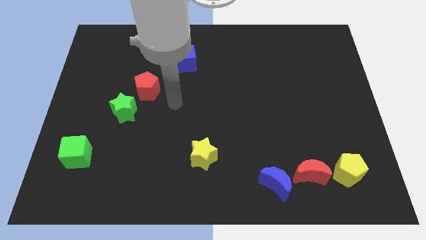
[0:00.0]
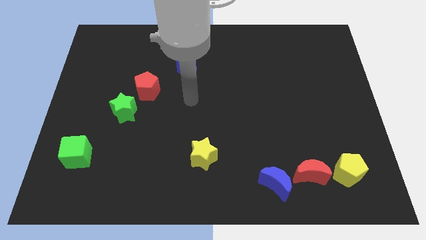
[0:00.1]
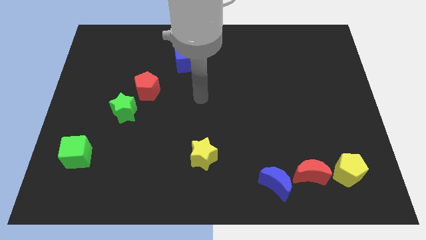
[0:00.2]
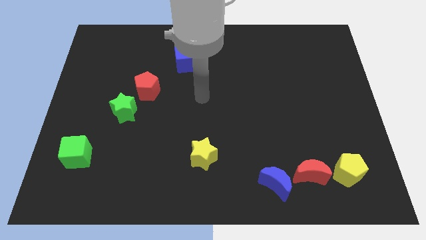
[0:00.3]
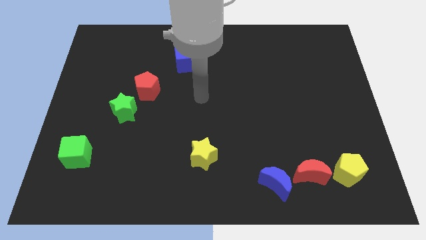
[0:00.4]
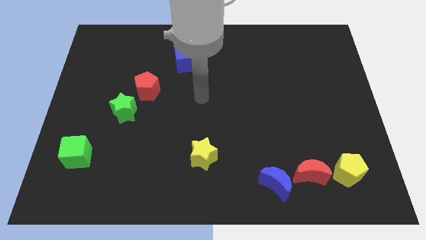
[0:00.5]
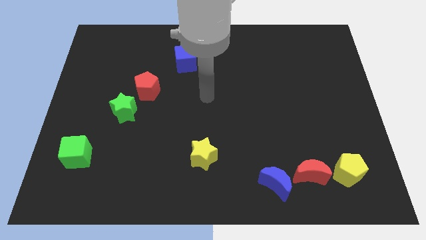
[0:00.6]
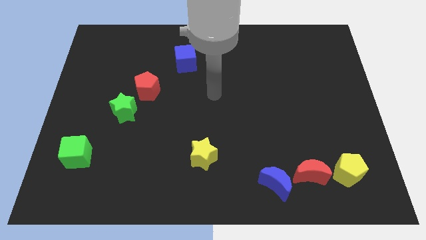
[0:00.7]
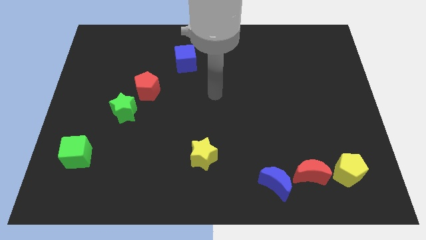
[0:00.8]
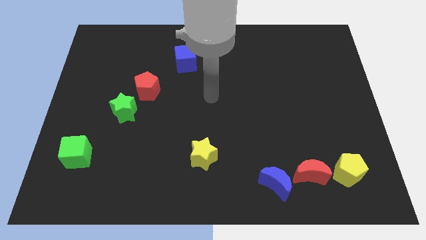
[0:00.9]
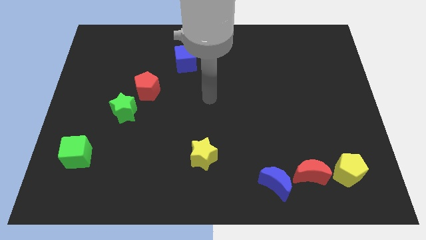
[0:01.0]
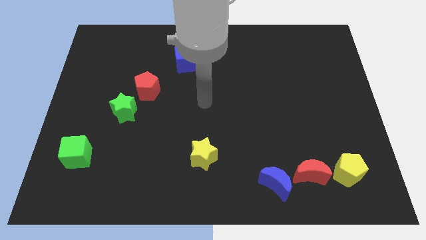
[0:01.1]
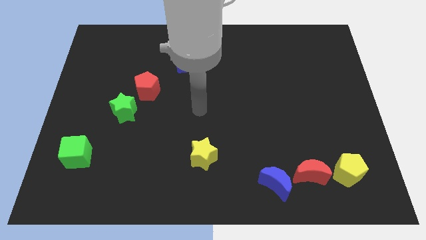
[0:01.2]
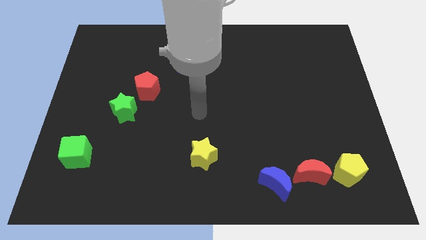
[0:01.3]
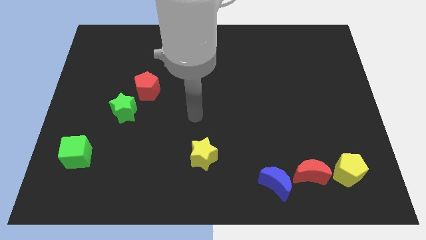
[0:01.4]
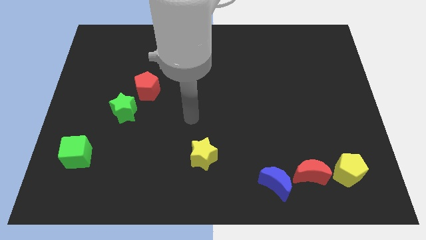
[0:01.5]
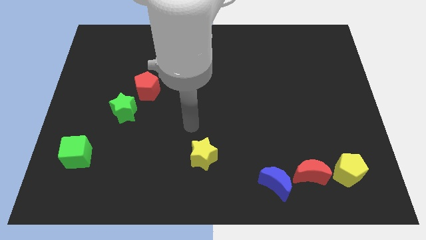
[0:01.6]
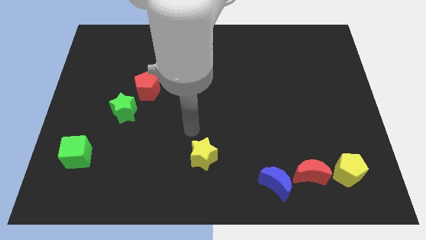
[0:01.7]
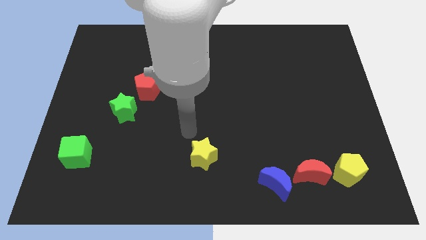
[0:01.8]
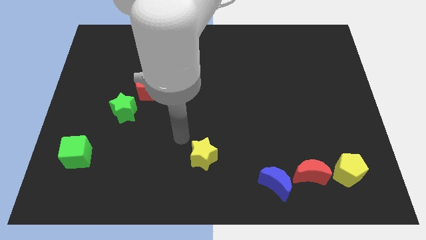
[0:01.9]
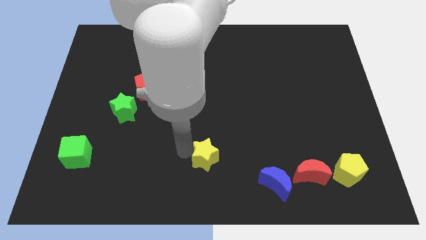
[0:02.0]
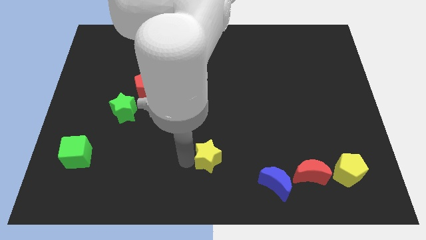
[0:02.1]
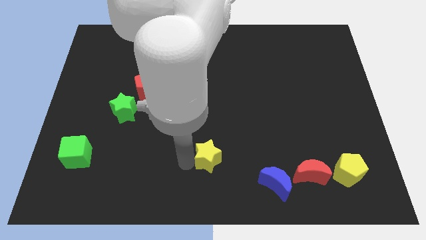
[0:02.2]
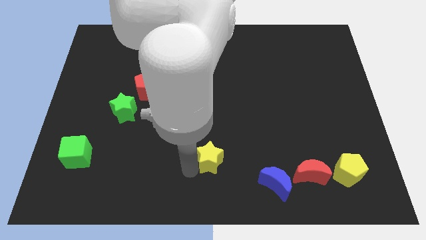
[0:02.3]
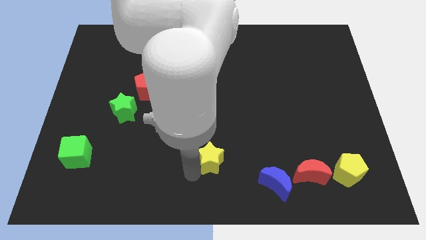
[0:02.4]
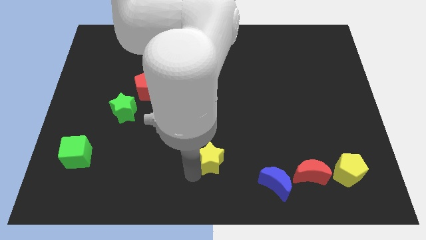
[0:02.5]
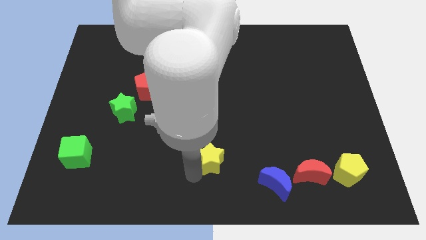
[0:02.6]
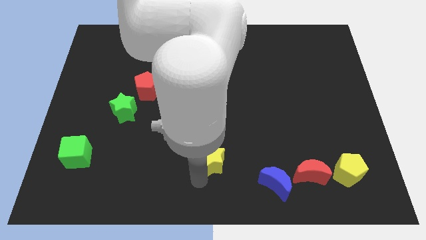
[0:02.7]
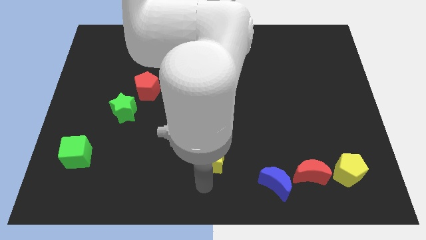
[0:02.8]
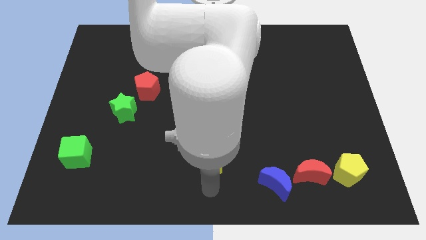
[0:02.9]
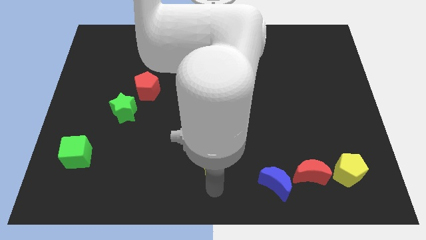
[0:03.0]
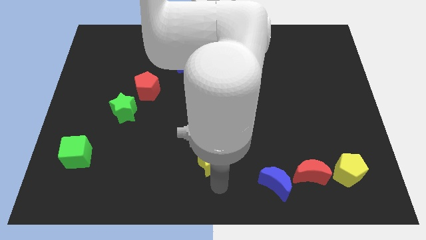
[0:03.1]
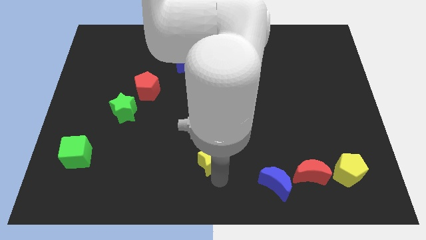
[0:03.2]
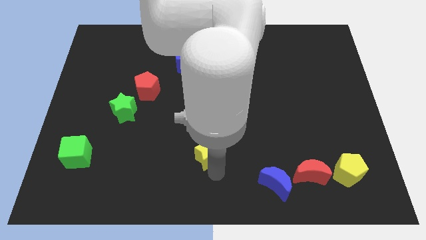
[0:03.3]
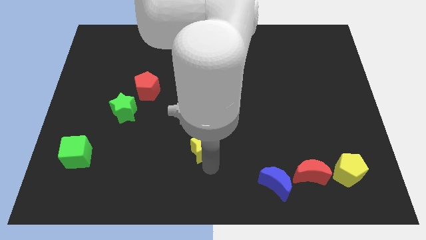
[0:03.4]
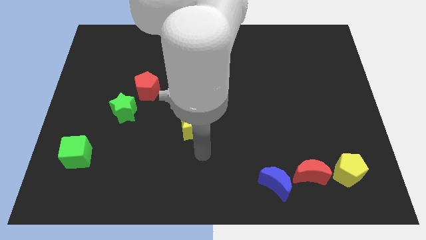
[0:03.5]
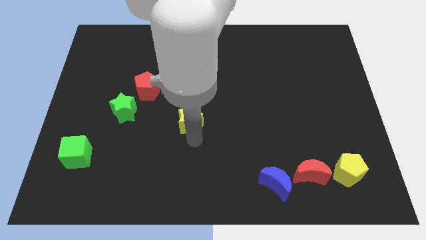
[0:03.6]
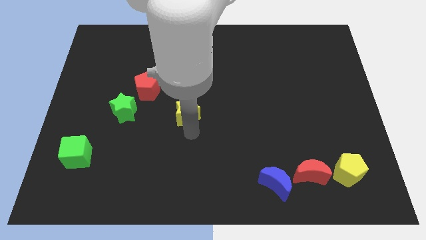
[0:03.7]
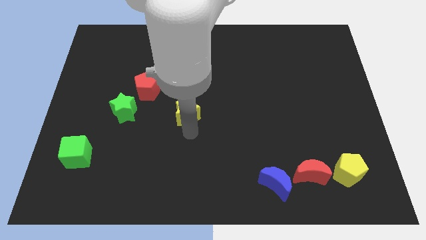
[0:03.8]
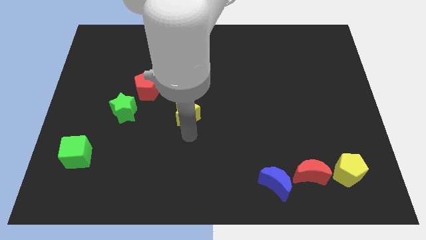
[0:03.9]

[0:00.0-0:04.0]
move the yellow star to the right of the green star

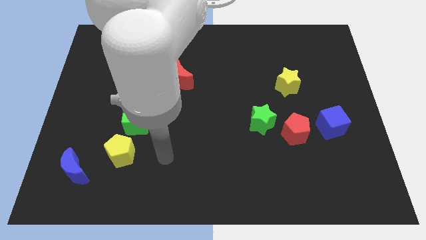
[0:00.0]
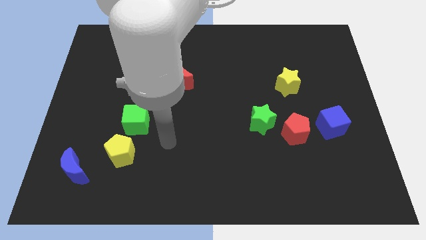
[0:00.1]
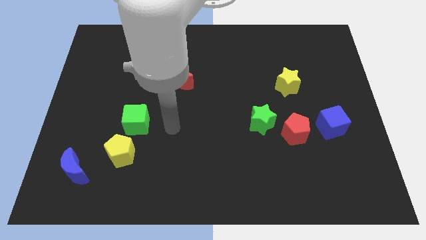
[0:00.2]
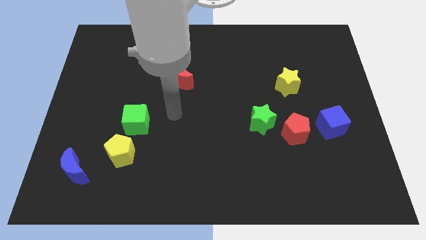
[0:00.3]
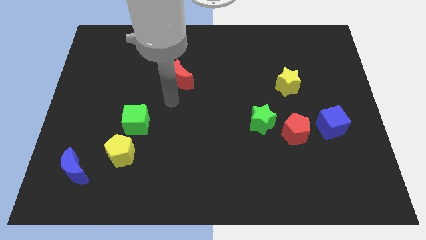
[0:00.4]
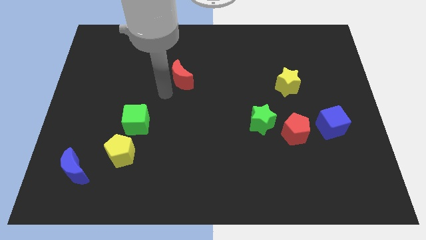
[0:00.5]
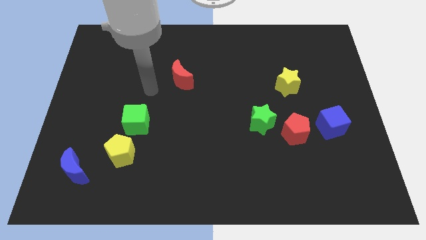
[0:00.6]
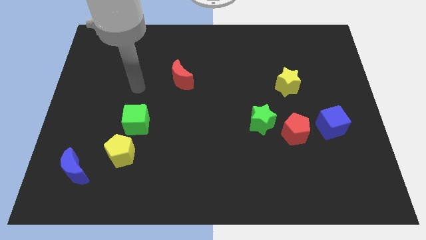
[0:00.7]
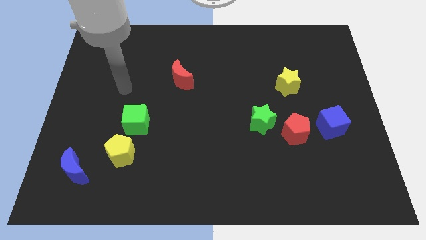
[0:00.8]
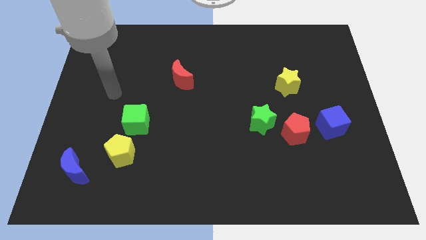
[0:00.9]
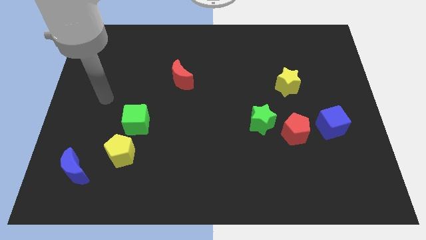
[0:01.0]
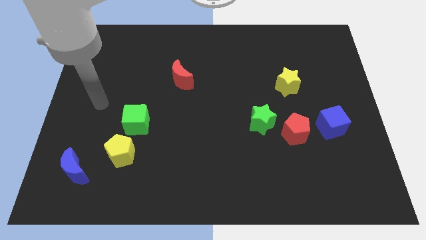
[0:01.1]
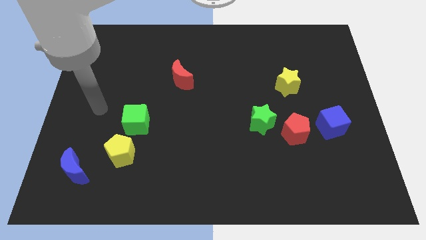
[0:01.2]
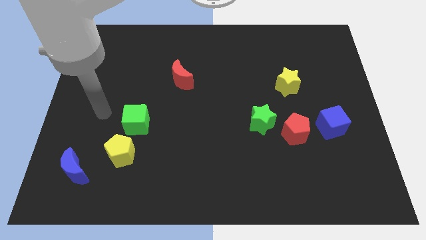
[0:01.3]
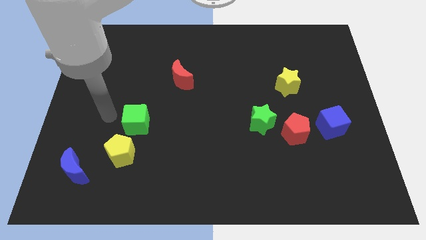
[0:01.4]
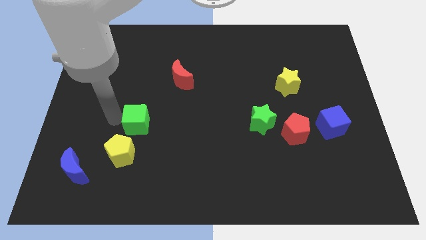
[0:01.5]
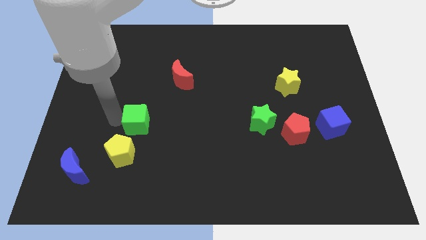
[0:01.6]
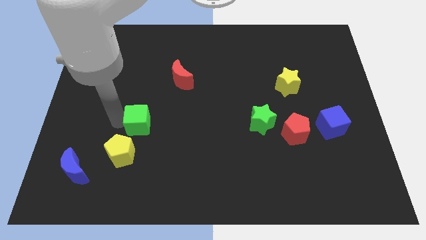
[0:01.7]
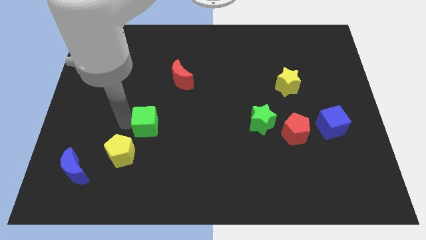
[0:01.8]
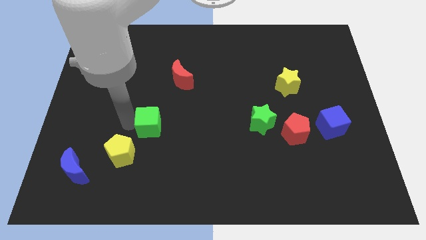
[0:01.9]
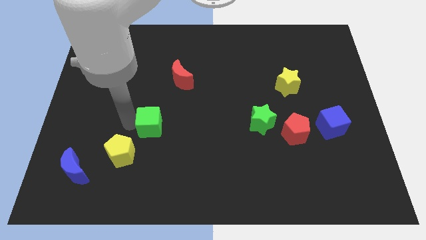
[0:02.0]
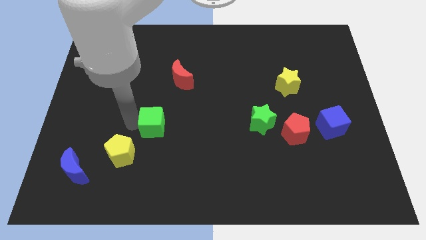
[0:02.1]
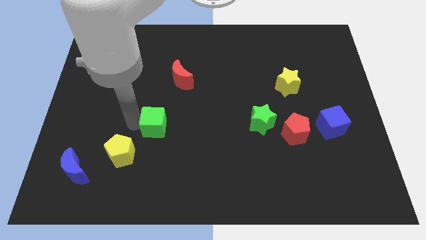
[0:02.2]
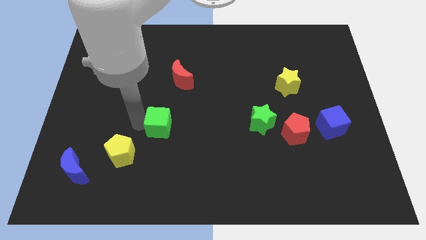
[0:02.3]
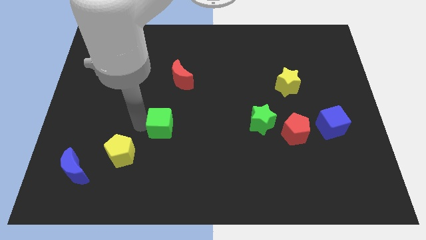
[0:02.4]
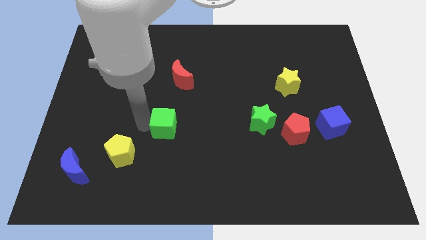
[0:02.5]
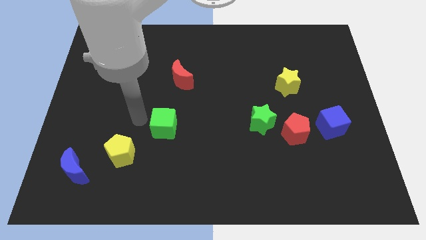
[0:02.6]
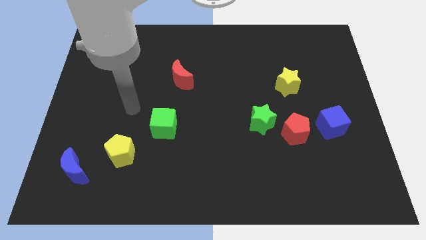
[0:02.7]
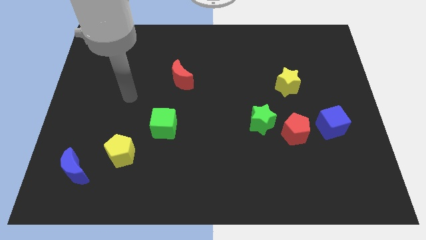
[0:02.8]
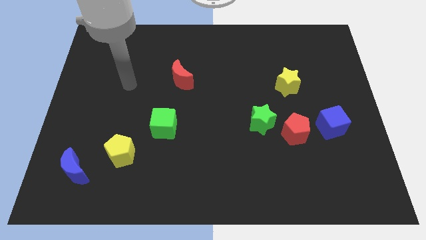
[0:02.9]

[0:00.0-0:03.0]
place the green cube diagonally right to the yellow pentagon

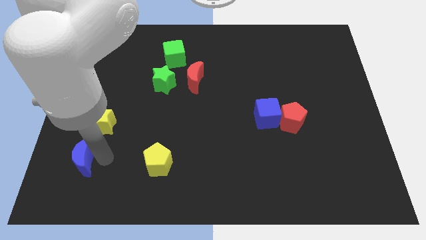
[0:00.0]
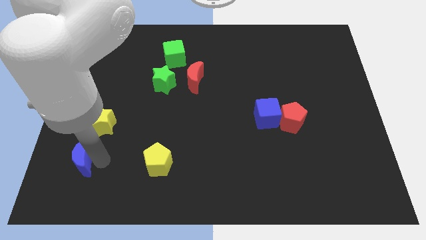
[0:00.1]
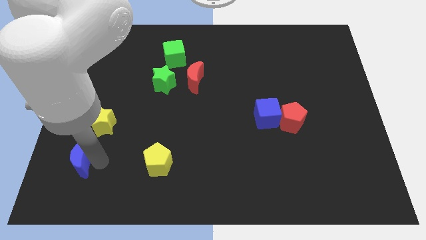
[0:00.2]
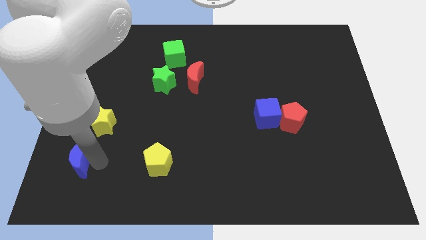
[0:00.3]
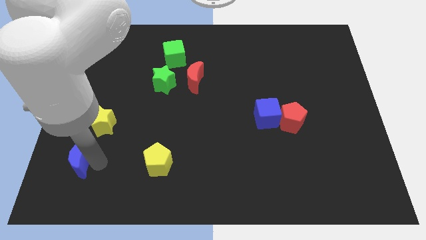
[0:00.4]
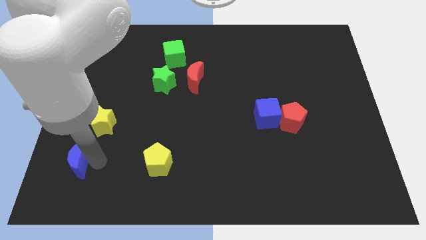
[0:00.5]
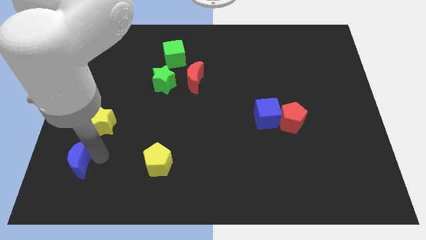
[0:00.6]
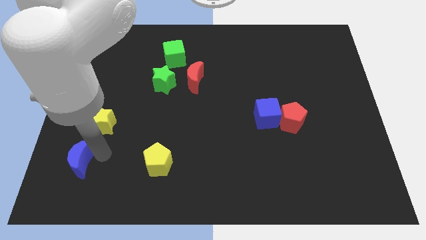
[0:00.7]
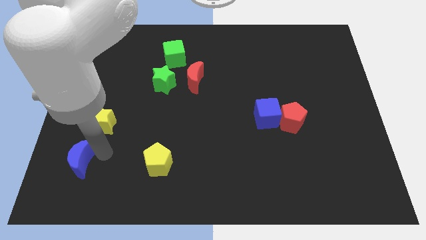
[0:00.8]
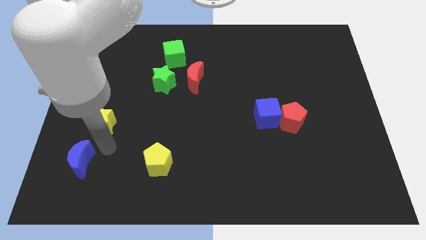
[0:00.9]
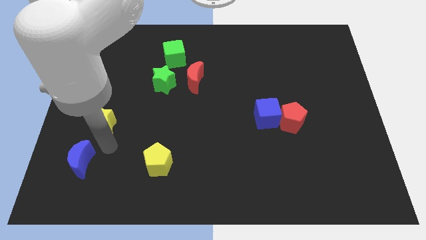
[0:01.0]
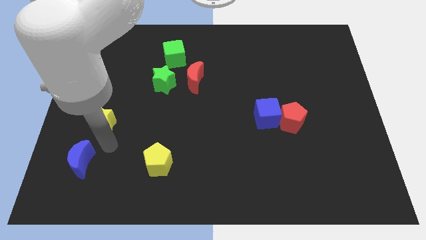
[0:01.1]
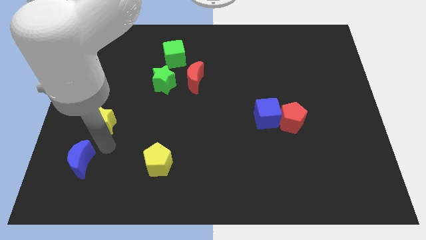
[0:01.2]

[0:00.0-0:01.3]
move blue moon left below the yellow star

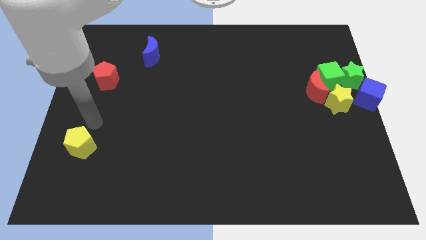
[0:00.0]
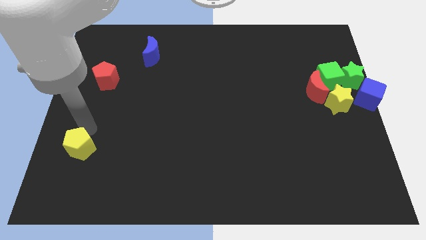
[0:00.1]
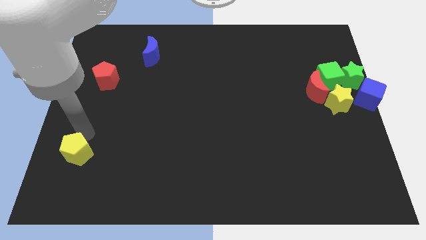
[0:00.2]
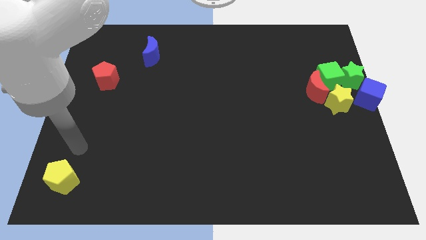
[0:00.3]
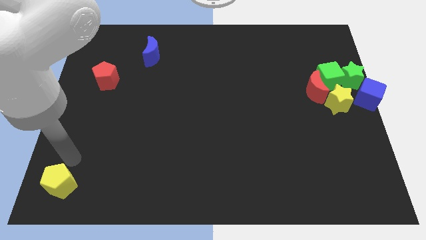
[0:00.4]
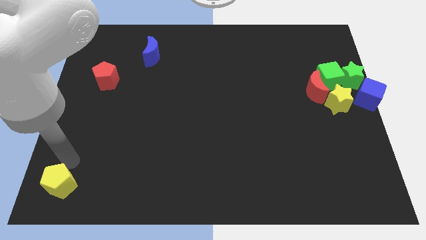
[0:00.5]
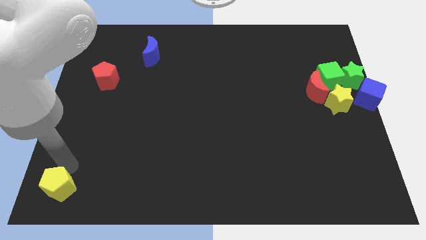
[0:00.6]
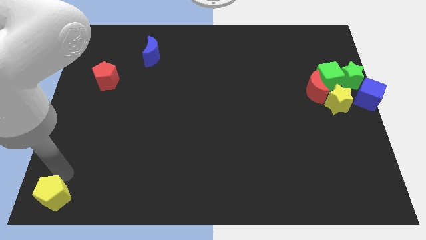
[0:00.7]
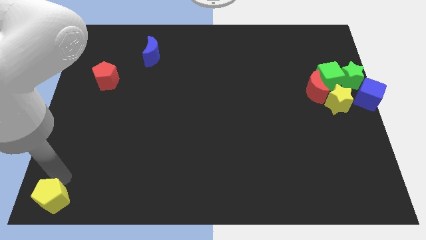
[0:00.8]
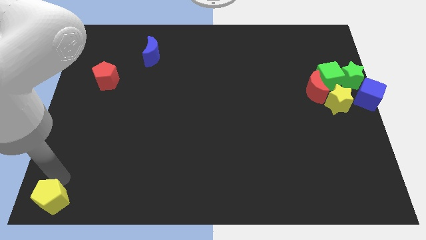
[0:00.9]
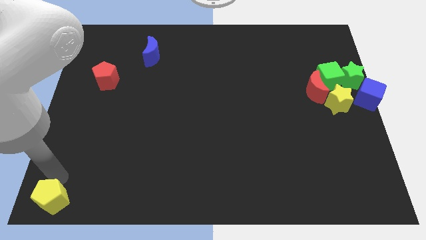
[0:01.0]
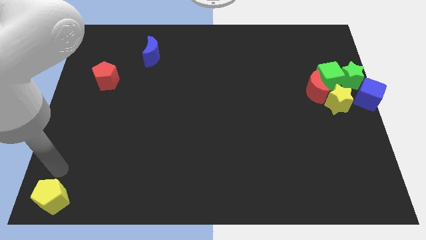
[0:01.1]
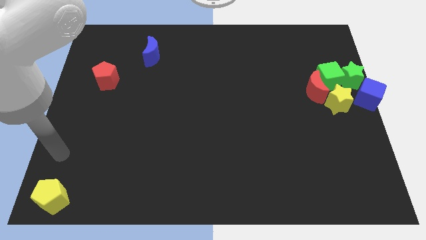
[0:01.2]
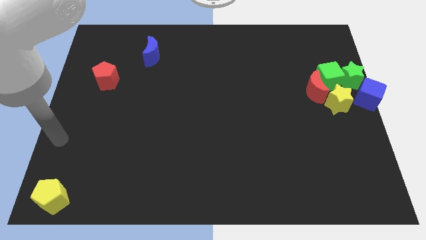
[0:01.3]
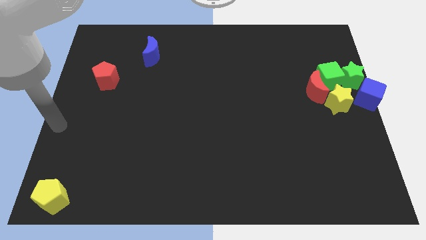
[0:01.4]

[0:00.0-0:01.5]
move the yellow pentagon to the bottom left on the board
